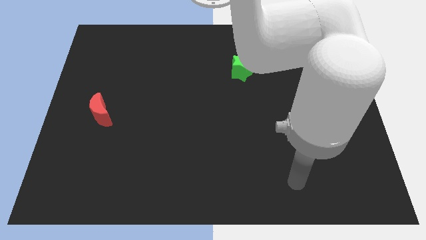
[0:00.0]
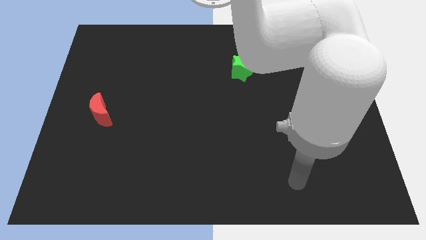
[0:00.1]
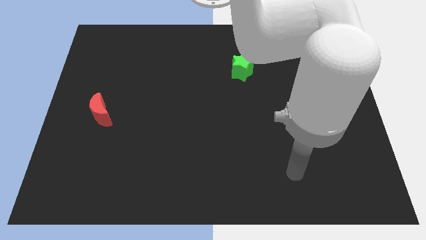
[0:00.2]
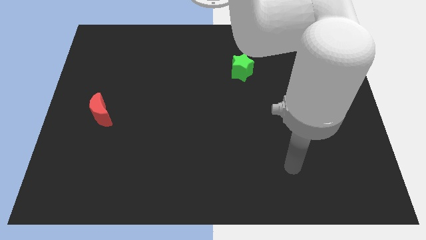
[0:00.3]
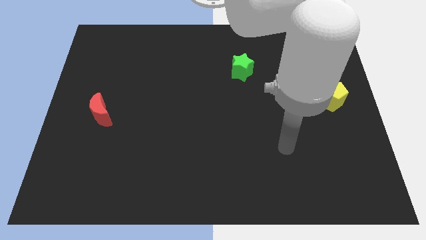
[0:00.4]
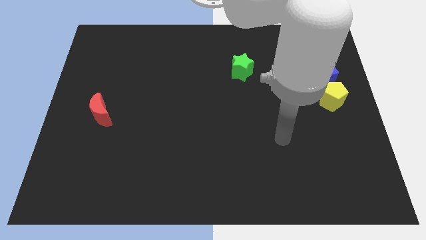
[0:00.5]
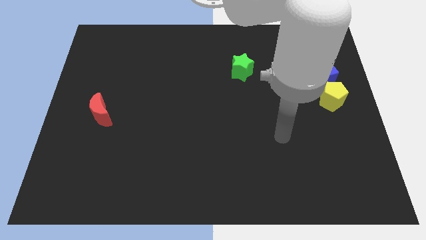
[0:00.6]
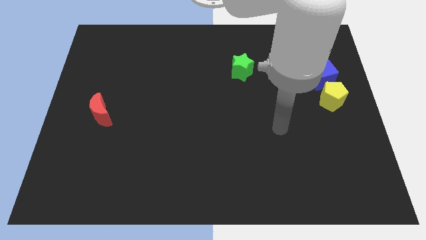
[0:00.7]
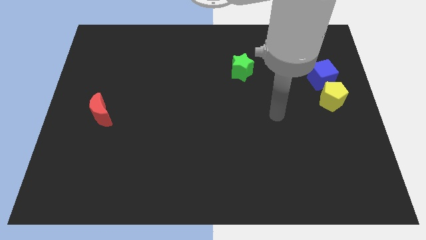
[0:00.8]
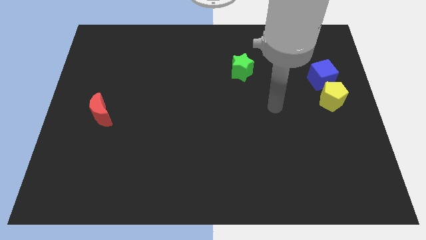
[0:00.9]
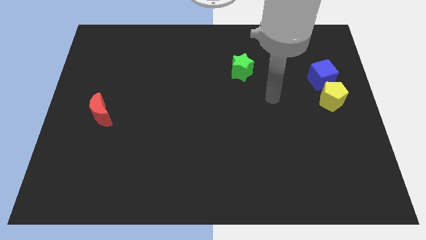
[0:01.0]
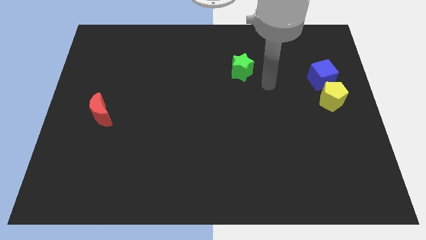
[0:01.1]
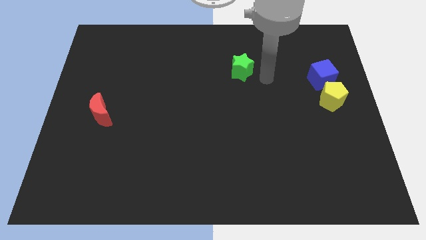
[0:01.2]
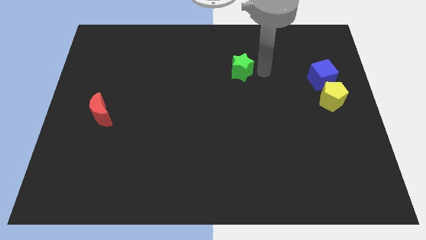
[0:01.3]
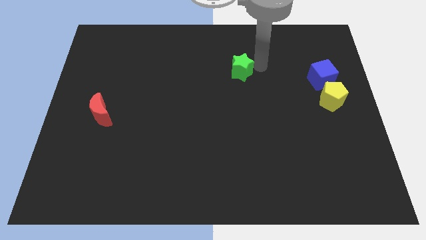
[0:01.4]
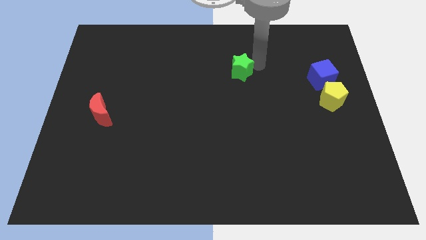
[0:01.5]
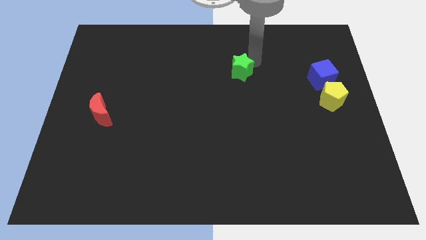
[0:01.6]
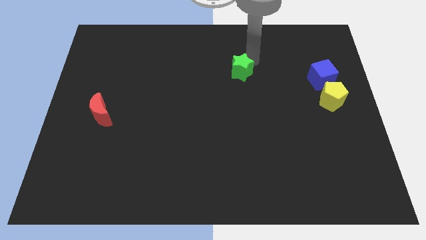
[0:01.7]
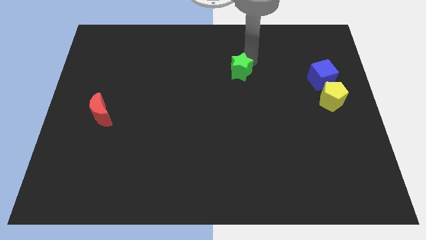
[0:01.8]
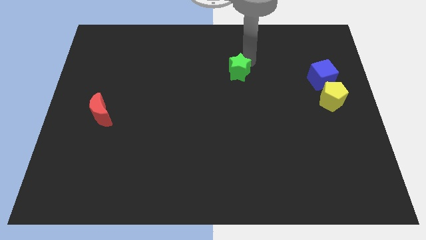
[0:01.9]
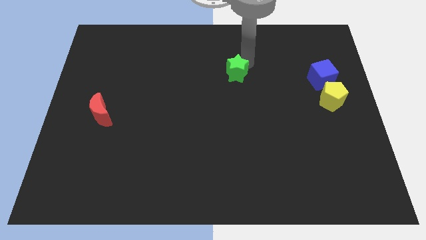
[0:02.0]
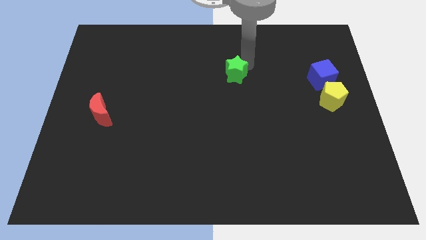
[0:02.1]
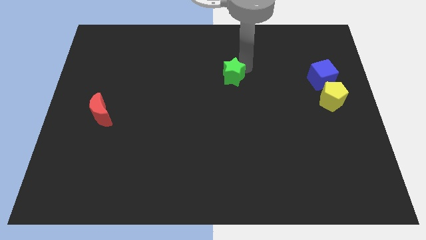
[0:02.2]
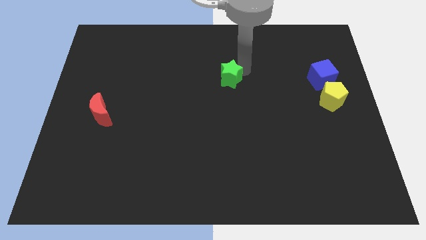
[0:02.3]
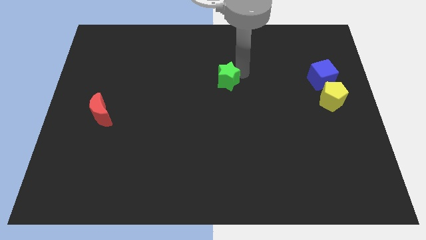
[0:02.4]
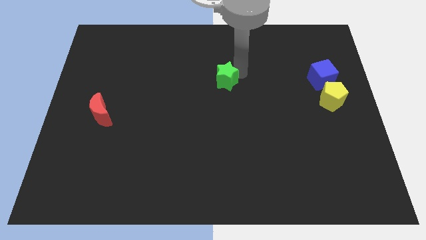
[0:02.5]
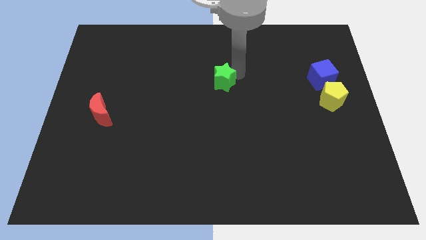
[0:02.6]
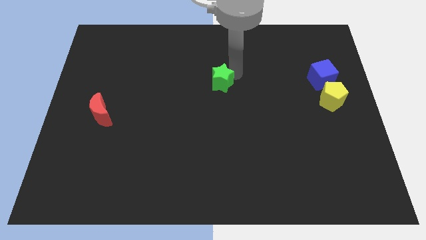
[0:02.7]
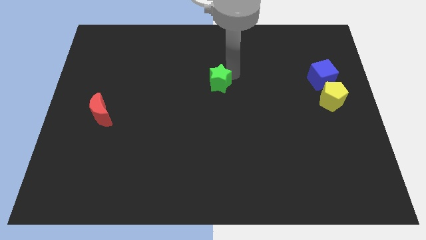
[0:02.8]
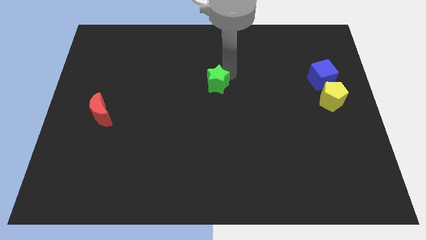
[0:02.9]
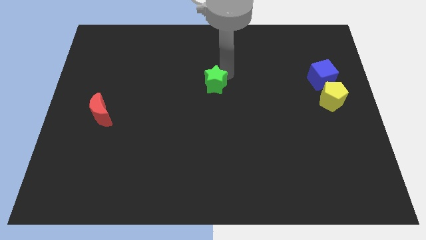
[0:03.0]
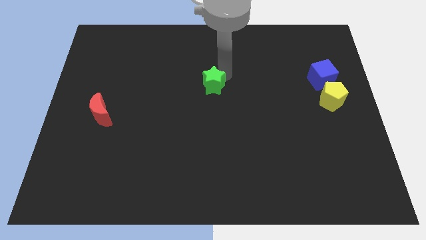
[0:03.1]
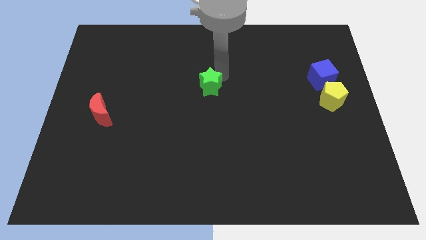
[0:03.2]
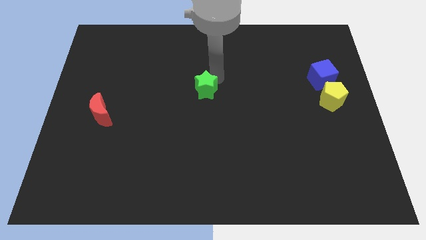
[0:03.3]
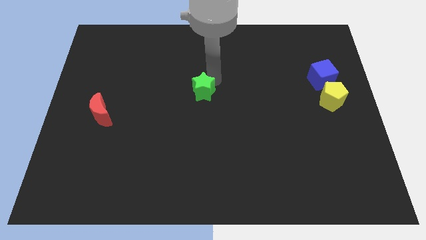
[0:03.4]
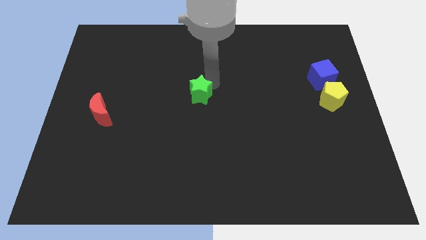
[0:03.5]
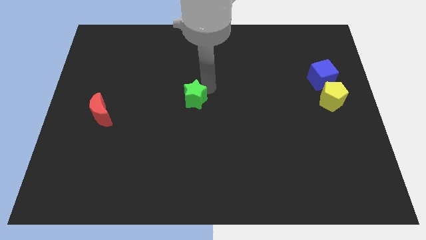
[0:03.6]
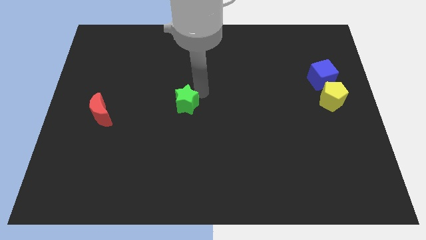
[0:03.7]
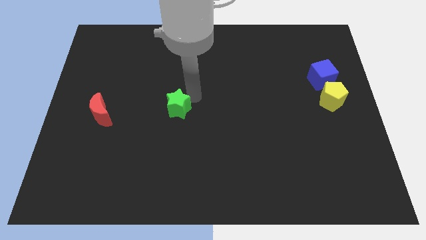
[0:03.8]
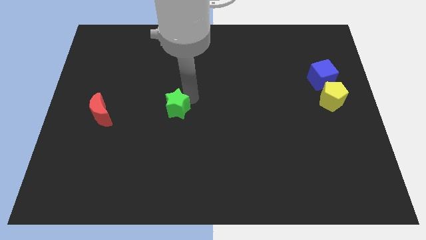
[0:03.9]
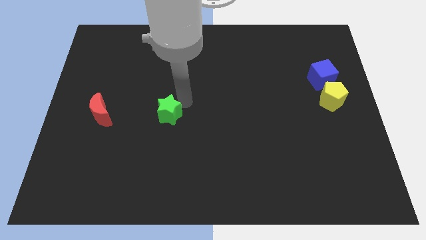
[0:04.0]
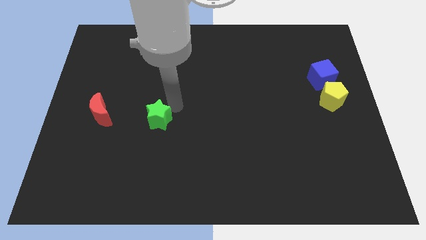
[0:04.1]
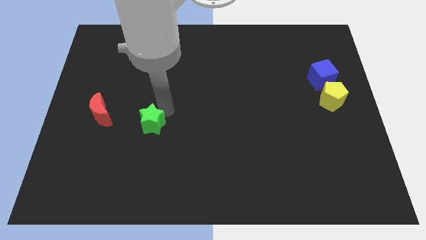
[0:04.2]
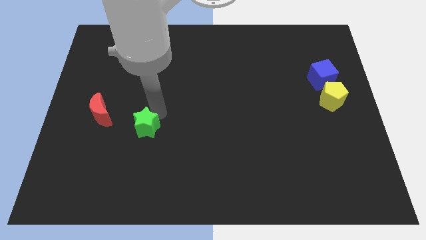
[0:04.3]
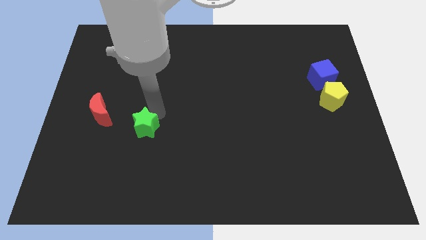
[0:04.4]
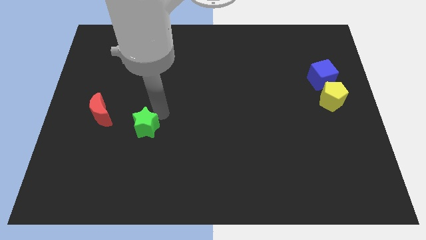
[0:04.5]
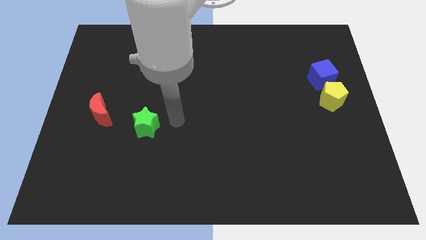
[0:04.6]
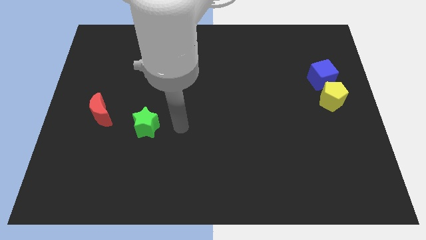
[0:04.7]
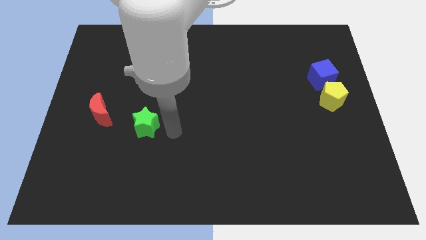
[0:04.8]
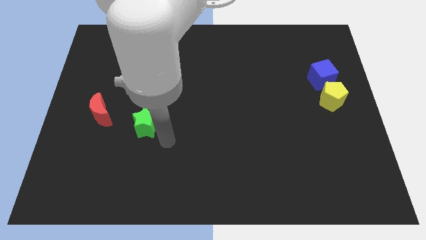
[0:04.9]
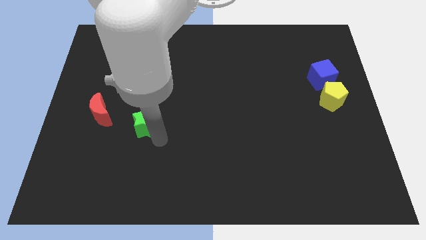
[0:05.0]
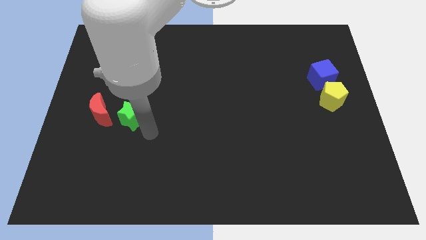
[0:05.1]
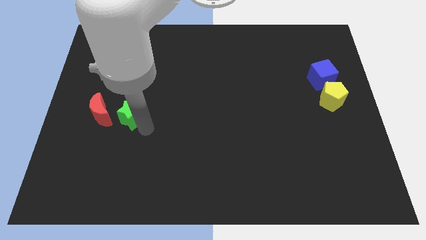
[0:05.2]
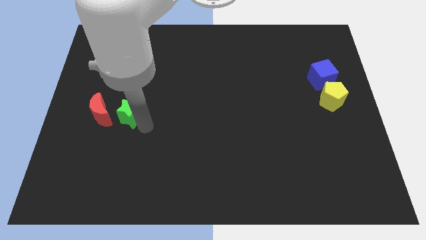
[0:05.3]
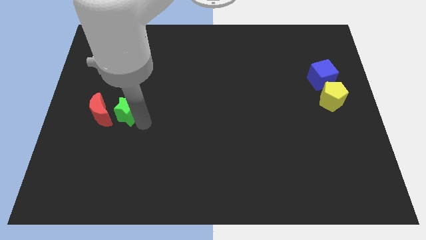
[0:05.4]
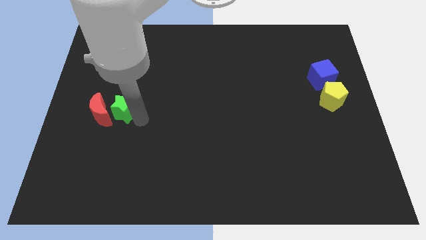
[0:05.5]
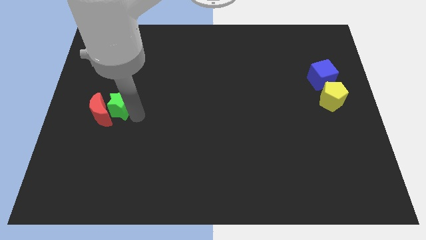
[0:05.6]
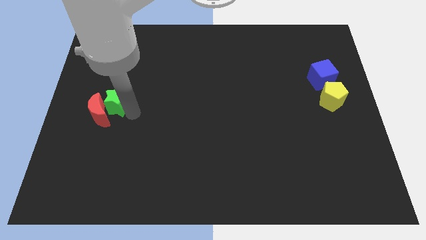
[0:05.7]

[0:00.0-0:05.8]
push the star towards the moon

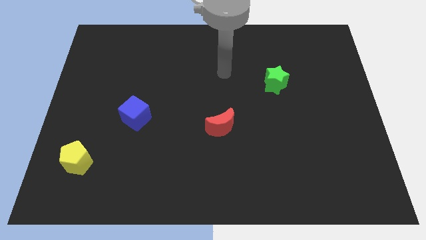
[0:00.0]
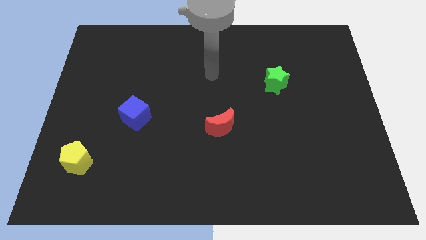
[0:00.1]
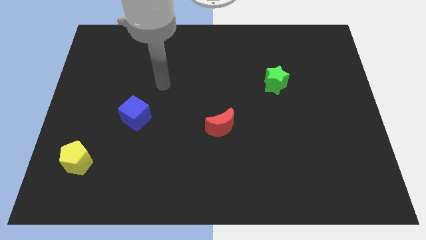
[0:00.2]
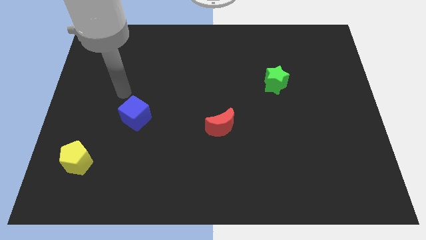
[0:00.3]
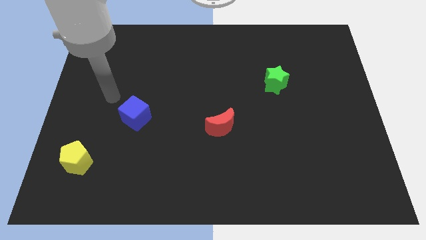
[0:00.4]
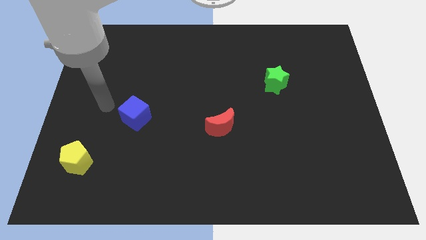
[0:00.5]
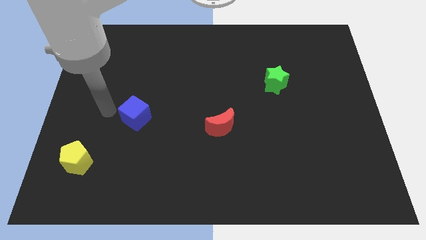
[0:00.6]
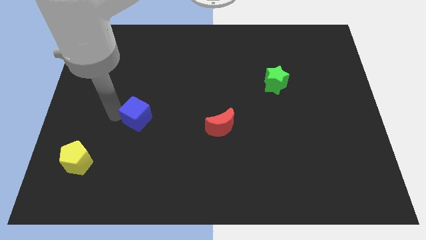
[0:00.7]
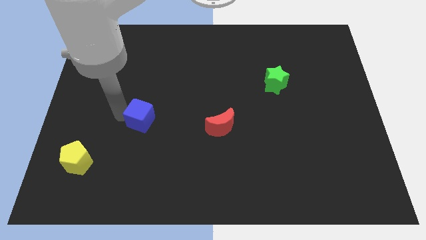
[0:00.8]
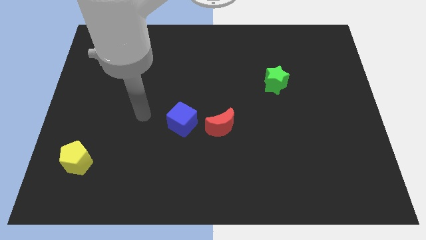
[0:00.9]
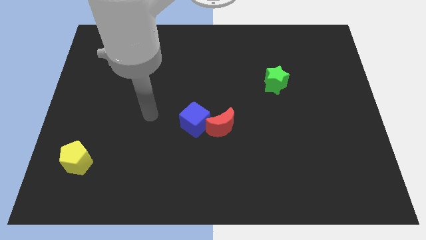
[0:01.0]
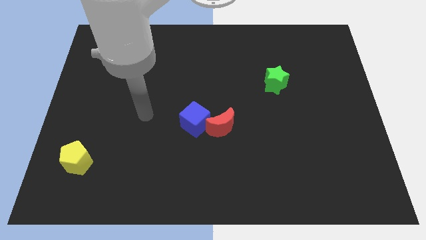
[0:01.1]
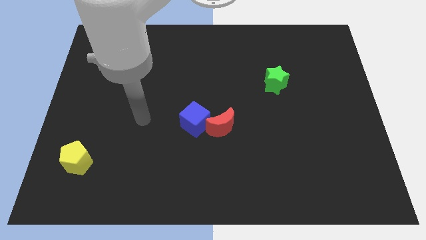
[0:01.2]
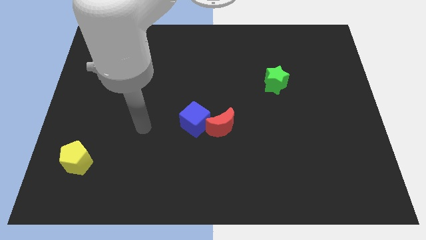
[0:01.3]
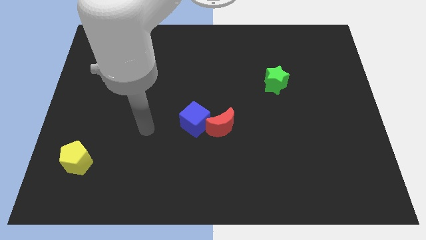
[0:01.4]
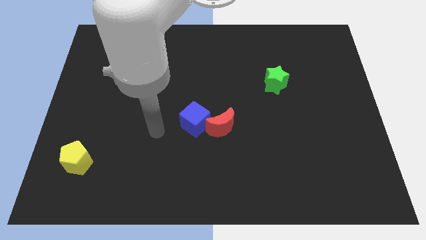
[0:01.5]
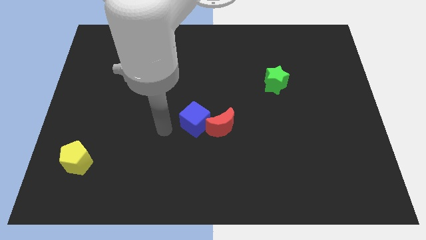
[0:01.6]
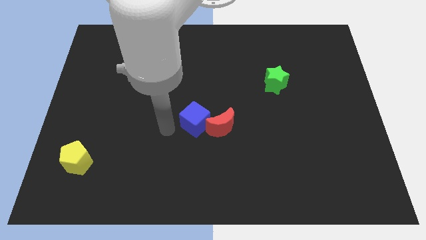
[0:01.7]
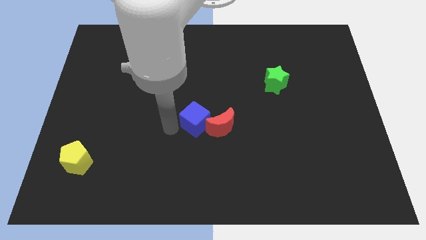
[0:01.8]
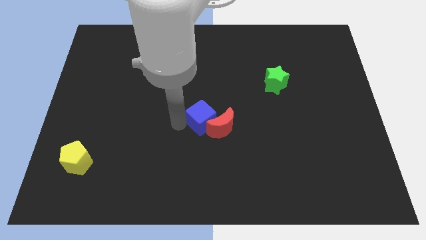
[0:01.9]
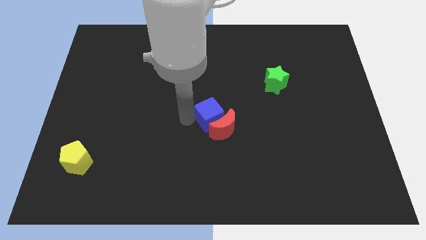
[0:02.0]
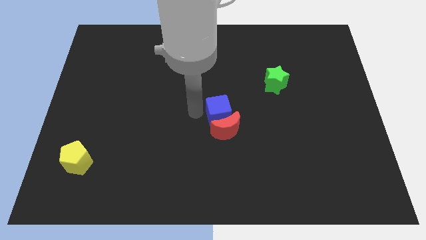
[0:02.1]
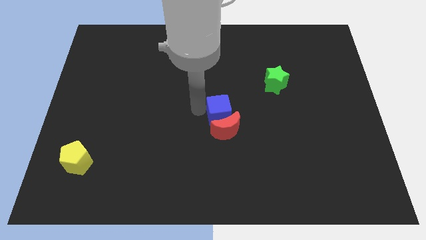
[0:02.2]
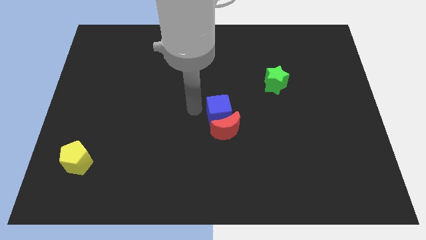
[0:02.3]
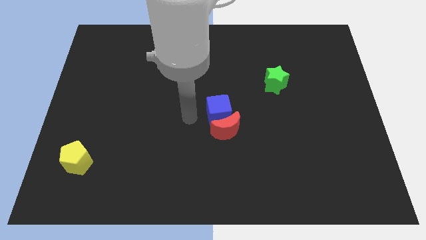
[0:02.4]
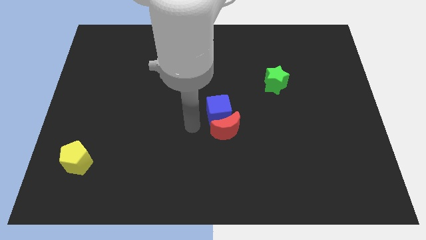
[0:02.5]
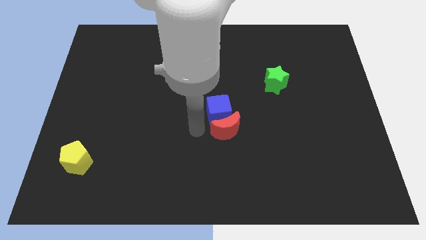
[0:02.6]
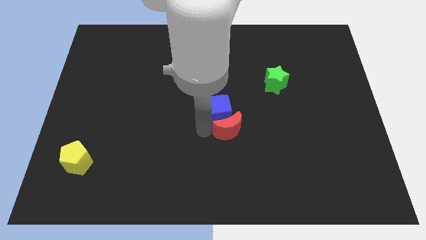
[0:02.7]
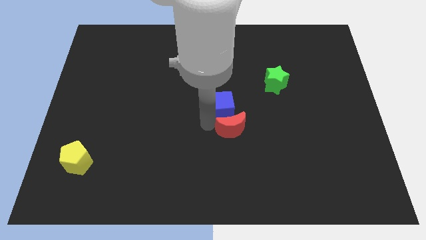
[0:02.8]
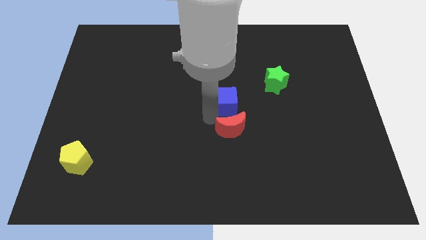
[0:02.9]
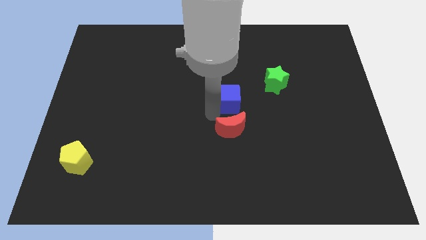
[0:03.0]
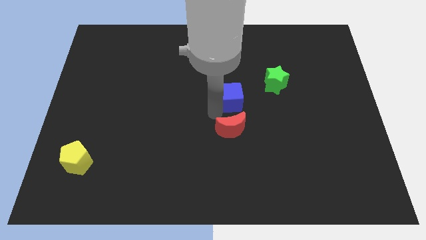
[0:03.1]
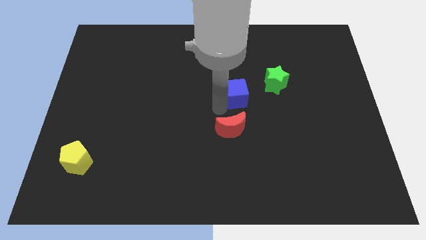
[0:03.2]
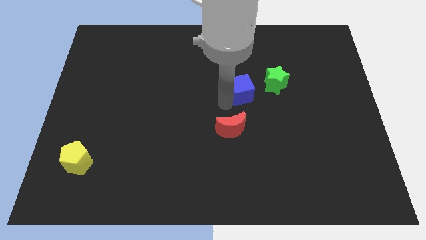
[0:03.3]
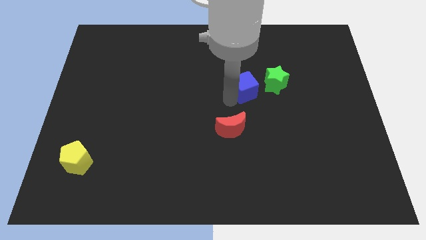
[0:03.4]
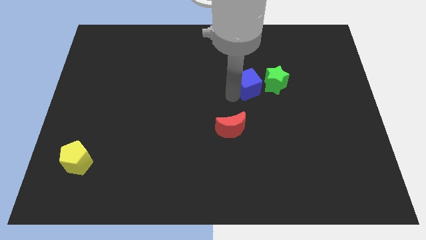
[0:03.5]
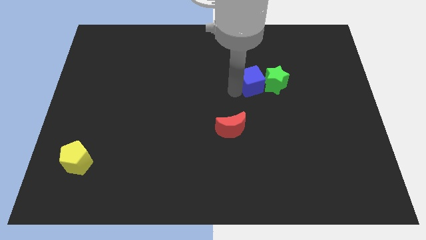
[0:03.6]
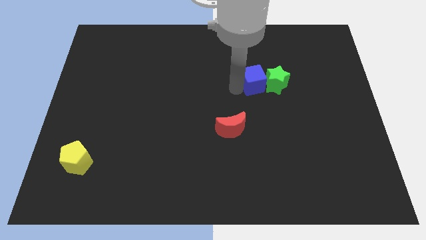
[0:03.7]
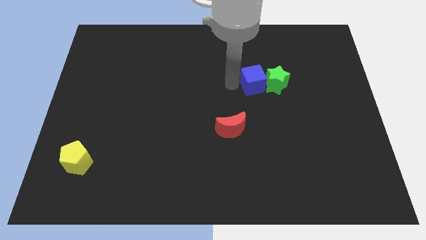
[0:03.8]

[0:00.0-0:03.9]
slide the cube next to the green star
